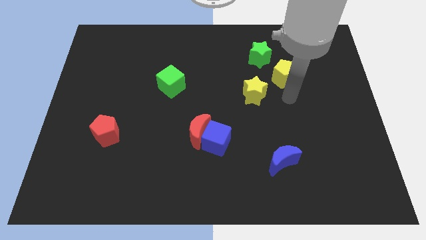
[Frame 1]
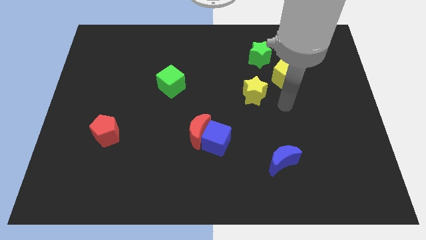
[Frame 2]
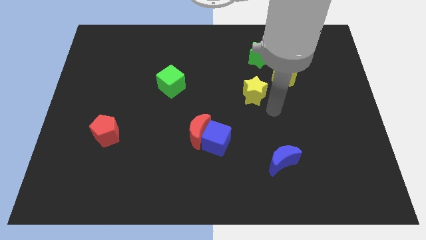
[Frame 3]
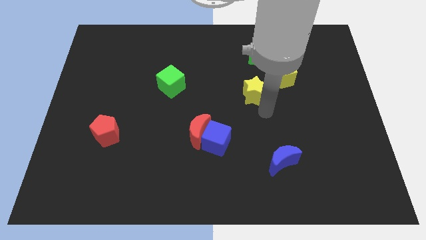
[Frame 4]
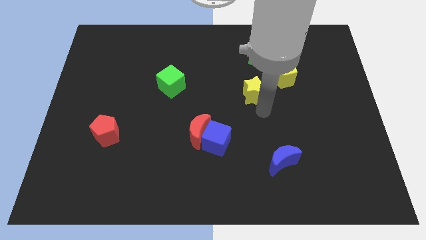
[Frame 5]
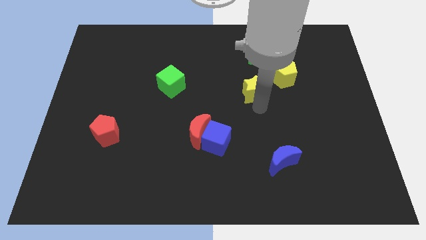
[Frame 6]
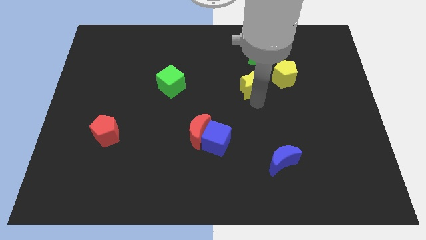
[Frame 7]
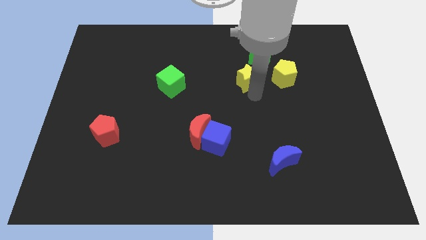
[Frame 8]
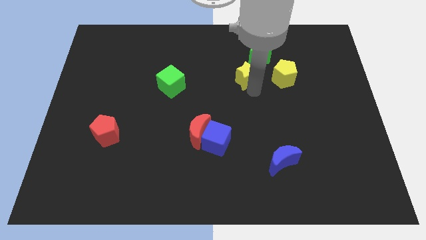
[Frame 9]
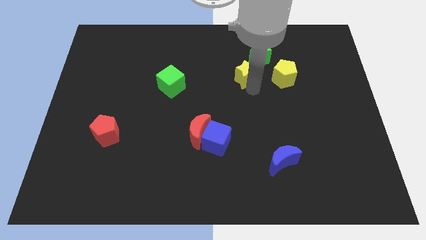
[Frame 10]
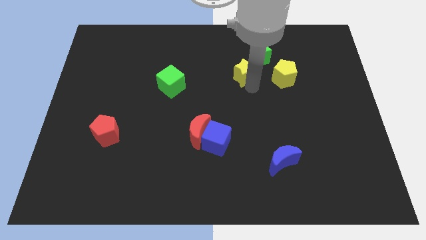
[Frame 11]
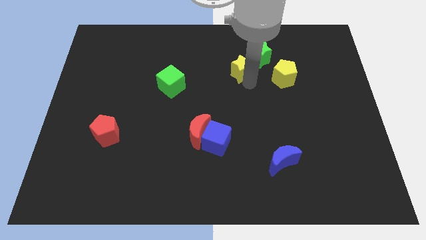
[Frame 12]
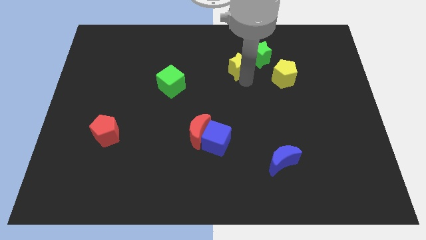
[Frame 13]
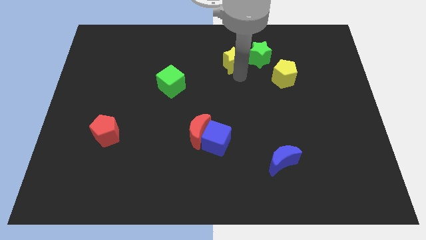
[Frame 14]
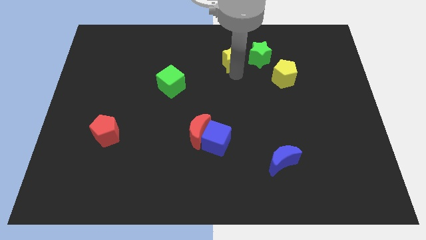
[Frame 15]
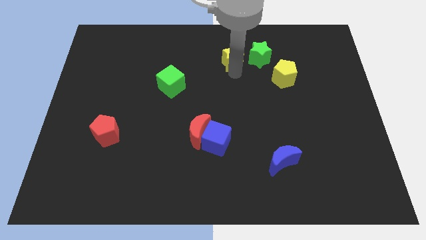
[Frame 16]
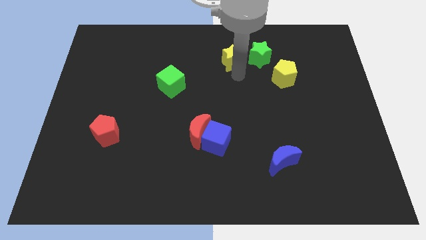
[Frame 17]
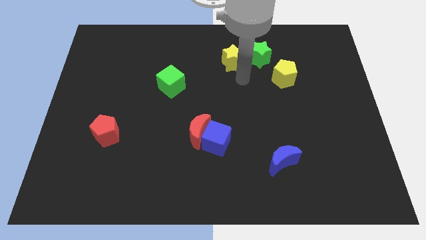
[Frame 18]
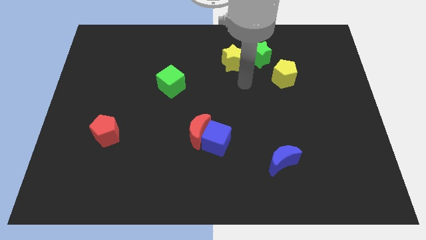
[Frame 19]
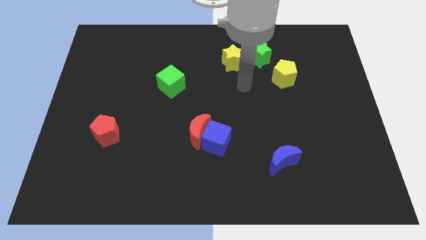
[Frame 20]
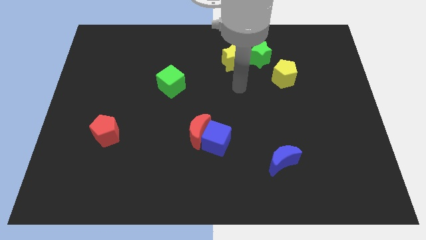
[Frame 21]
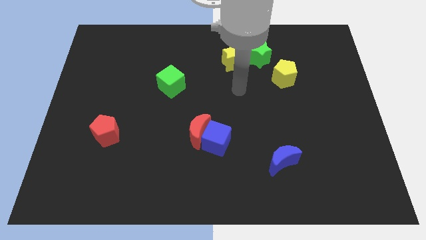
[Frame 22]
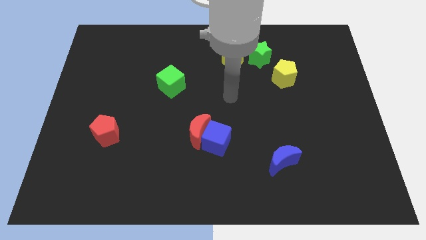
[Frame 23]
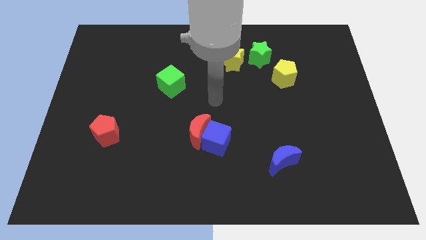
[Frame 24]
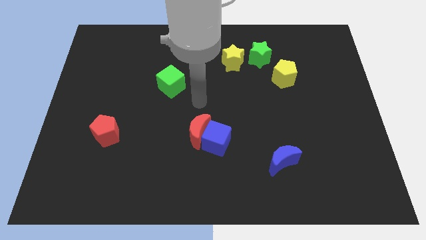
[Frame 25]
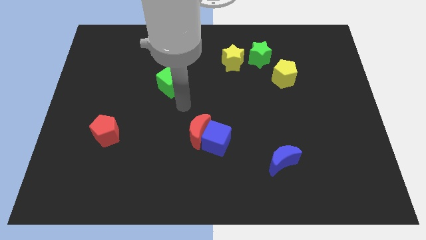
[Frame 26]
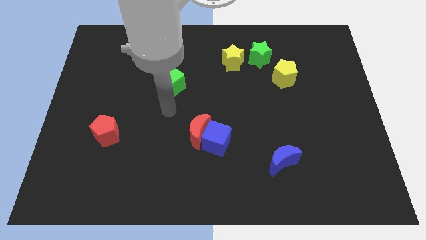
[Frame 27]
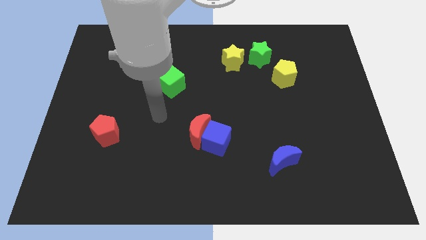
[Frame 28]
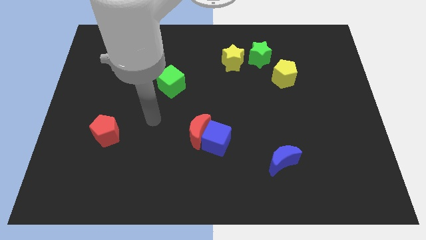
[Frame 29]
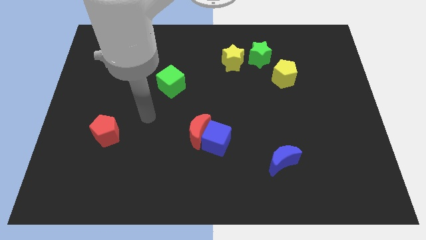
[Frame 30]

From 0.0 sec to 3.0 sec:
push the yellow star to the left of the green star

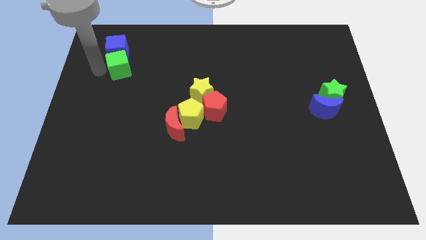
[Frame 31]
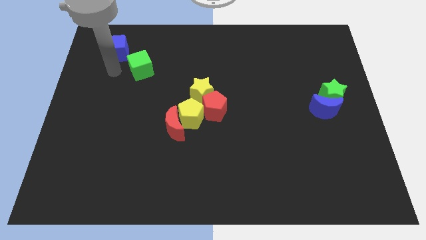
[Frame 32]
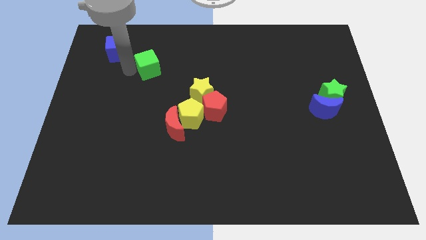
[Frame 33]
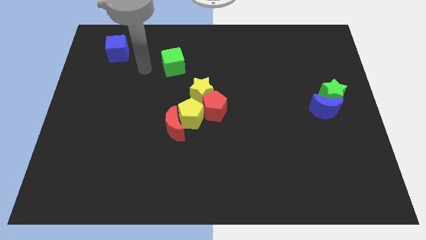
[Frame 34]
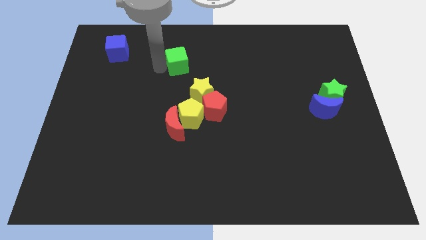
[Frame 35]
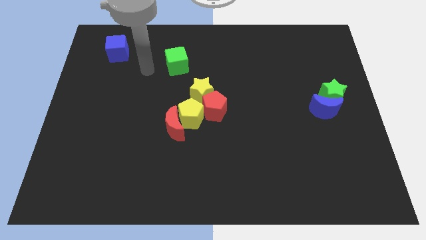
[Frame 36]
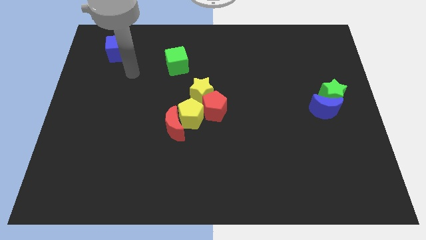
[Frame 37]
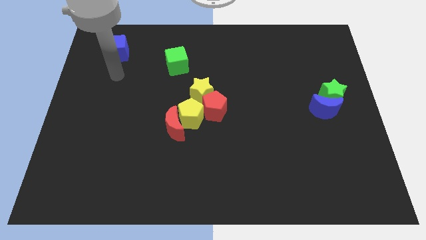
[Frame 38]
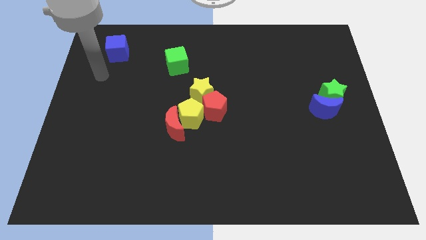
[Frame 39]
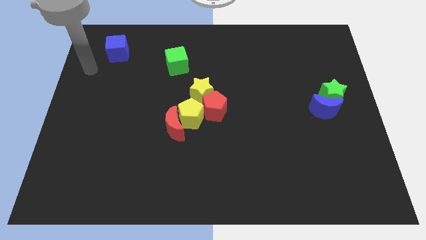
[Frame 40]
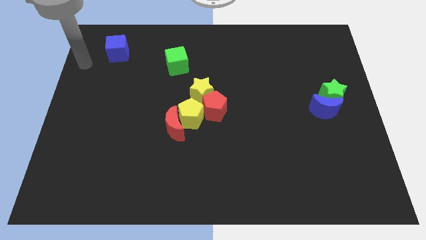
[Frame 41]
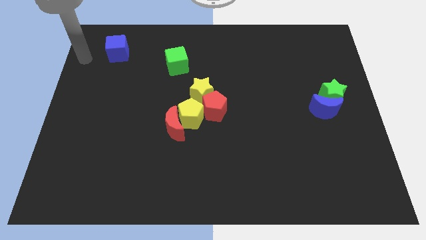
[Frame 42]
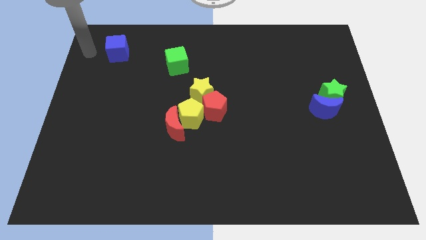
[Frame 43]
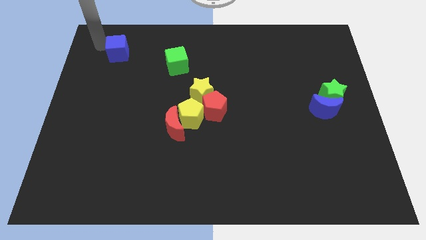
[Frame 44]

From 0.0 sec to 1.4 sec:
push the green cube opposite to the yellow star

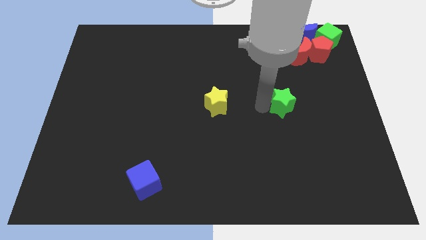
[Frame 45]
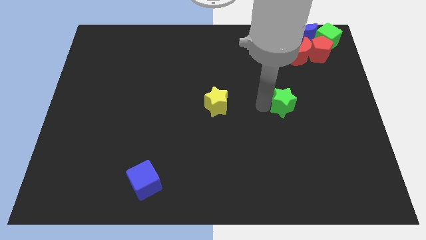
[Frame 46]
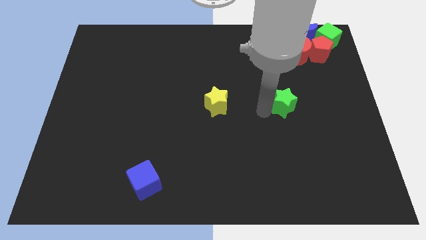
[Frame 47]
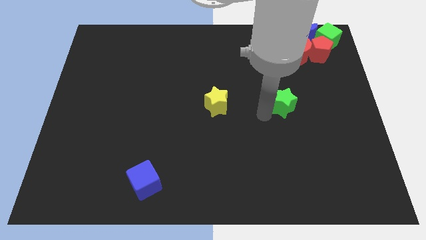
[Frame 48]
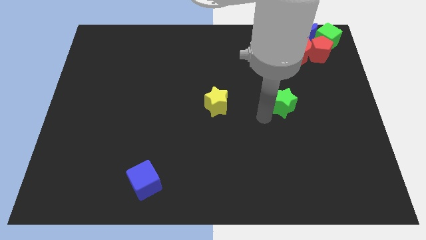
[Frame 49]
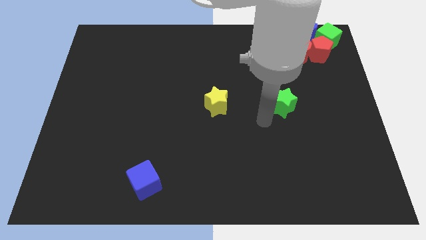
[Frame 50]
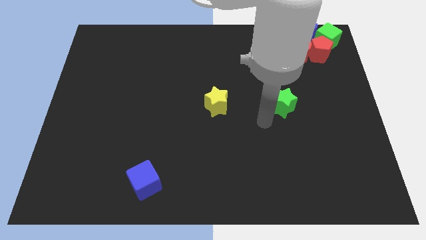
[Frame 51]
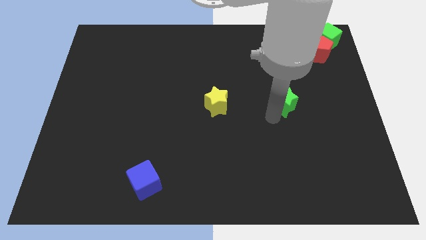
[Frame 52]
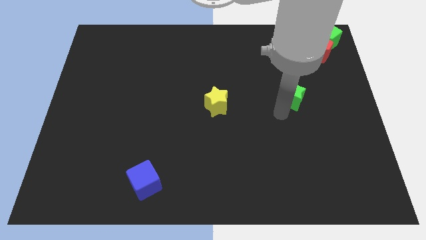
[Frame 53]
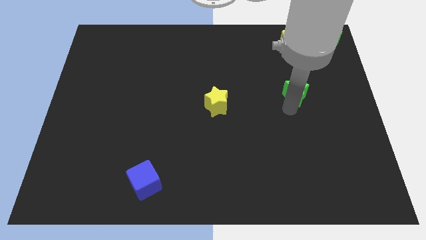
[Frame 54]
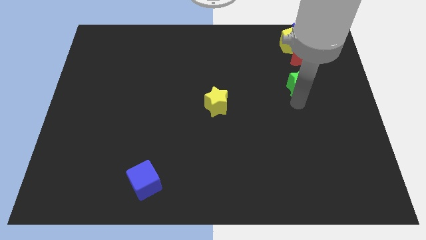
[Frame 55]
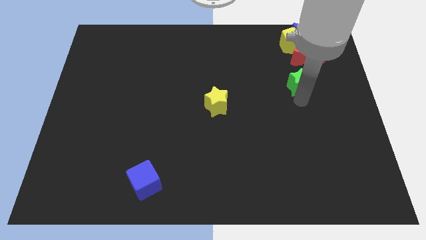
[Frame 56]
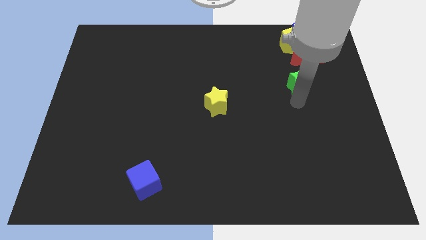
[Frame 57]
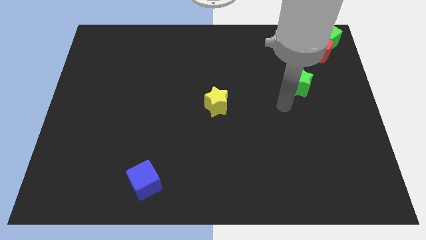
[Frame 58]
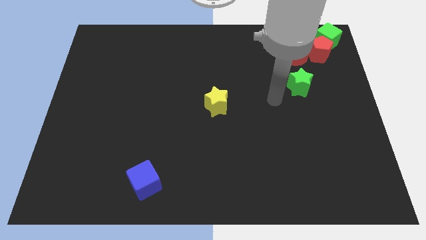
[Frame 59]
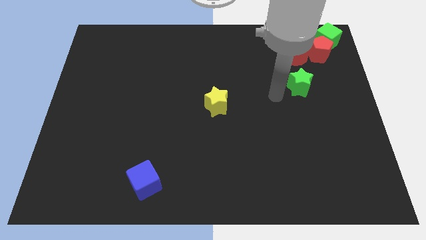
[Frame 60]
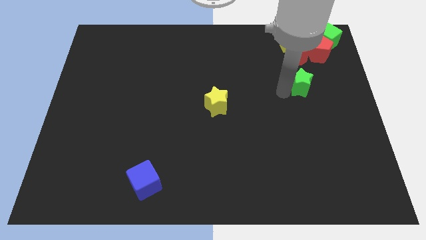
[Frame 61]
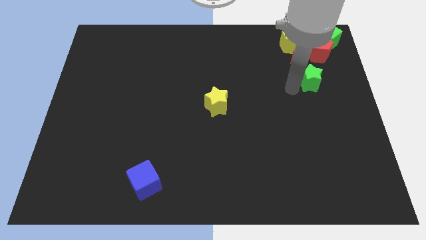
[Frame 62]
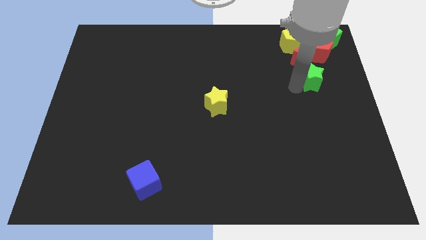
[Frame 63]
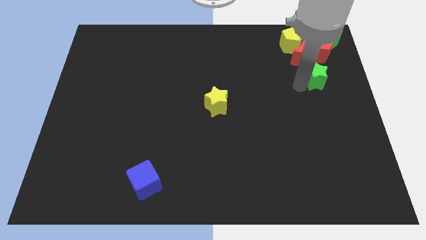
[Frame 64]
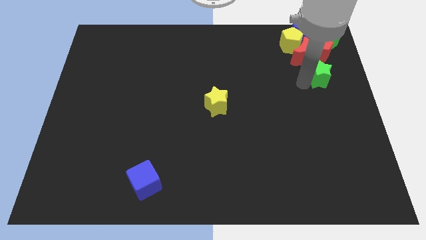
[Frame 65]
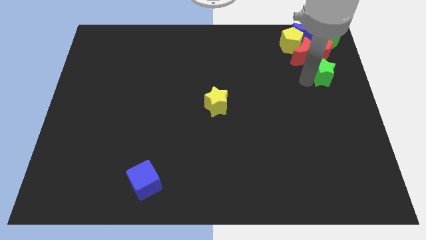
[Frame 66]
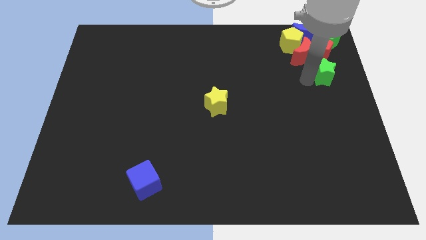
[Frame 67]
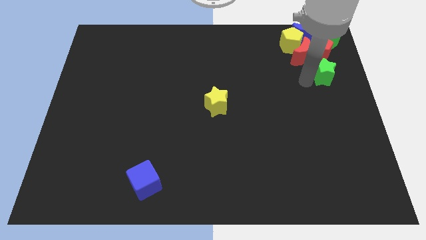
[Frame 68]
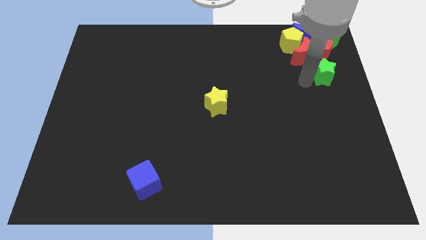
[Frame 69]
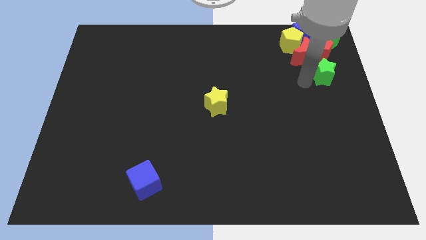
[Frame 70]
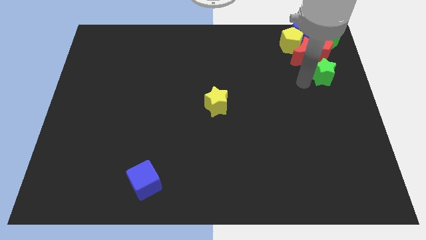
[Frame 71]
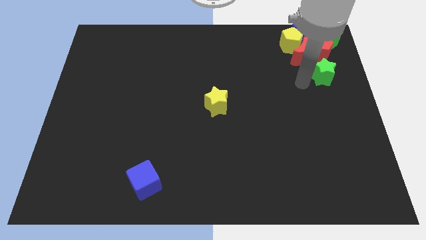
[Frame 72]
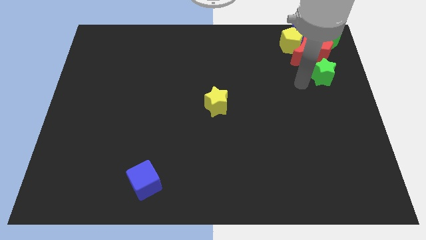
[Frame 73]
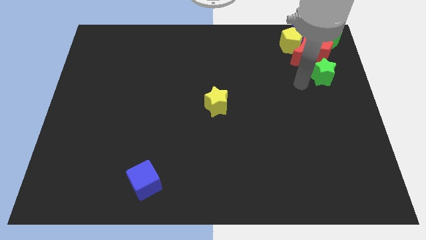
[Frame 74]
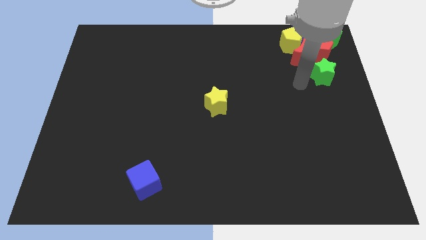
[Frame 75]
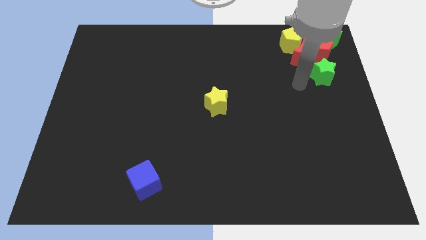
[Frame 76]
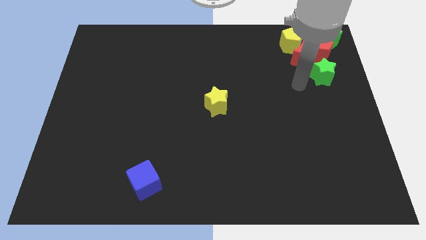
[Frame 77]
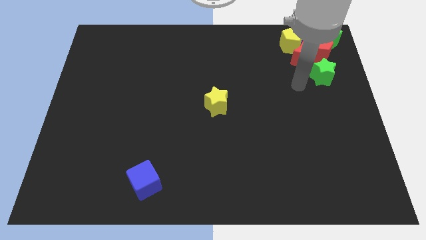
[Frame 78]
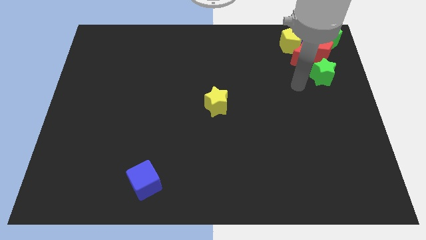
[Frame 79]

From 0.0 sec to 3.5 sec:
put the green star underneath the red pentagon

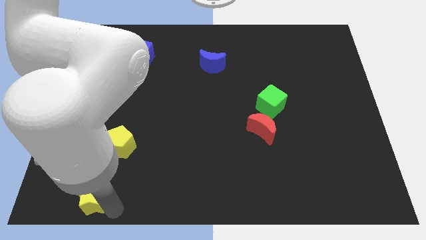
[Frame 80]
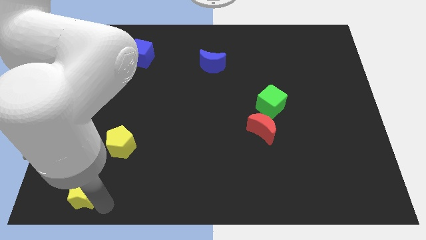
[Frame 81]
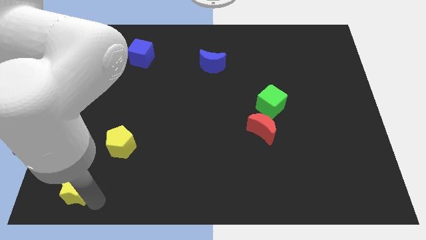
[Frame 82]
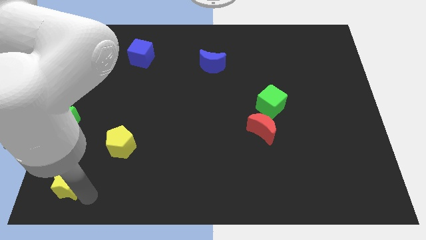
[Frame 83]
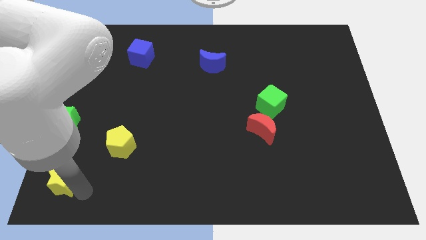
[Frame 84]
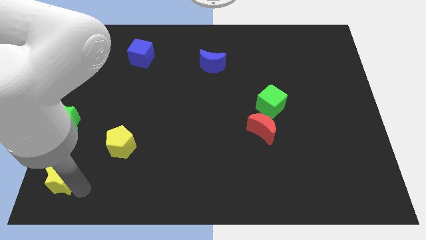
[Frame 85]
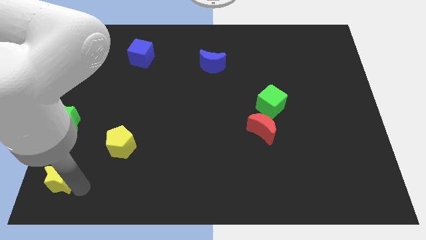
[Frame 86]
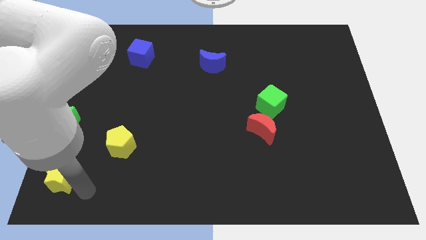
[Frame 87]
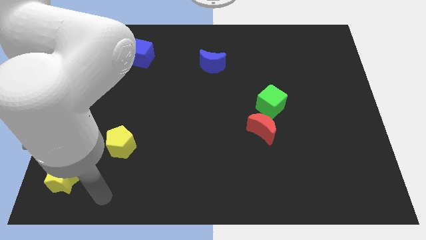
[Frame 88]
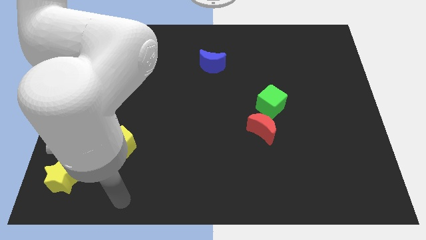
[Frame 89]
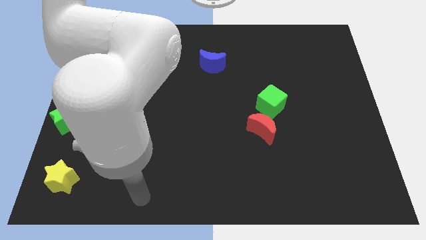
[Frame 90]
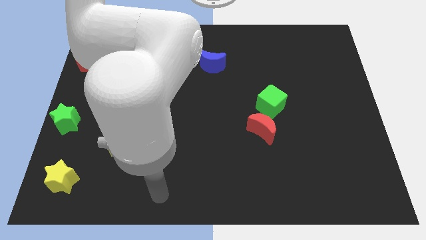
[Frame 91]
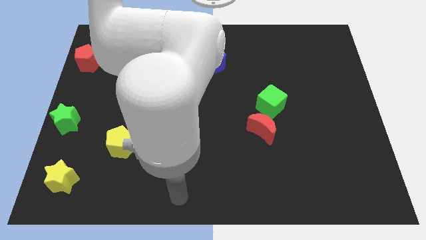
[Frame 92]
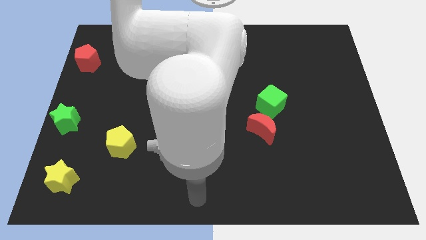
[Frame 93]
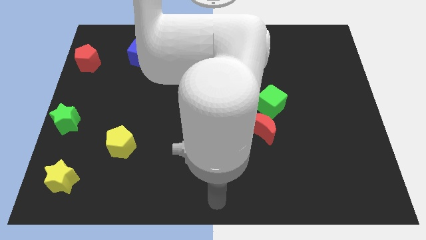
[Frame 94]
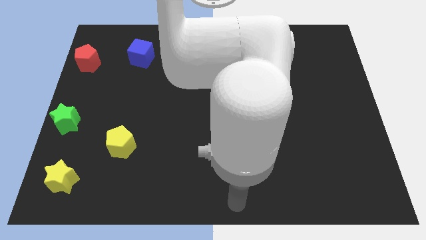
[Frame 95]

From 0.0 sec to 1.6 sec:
place the yellow star diagonal to the yellow pentagon
